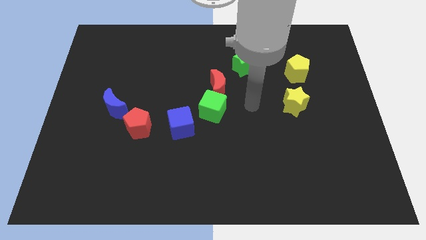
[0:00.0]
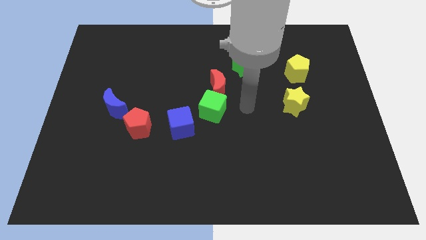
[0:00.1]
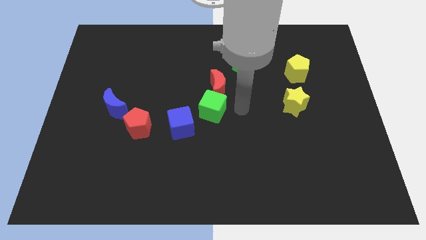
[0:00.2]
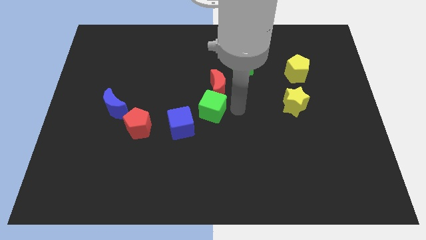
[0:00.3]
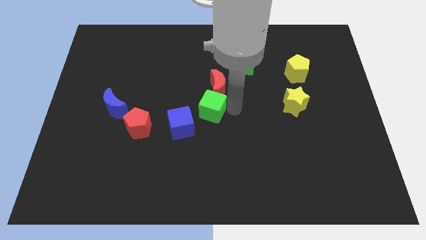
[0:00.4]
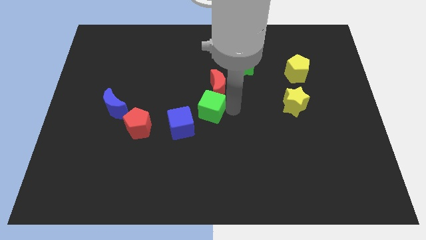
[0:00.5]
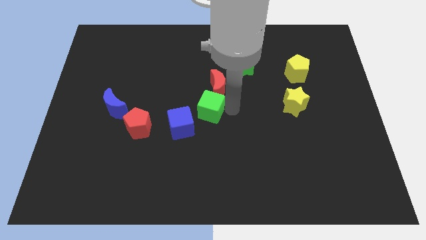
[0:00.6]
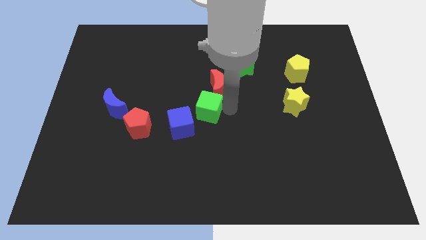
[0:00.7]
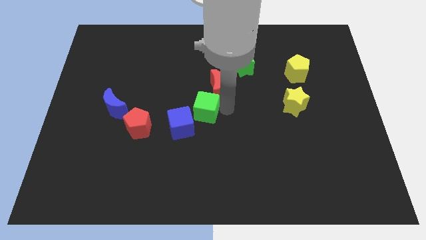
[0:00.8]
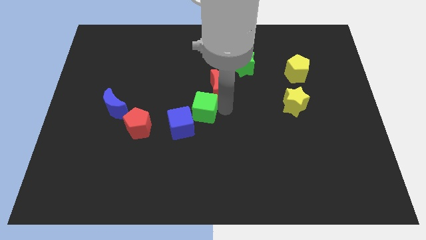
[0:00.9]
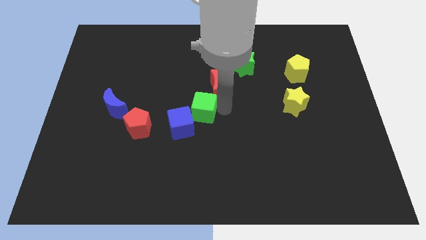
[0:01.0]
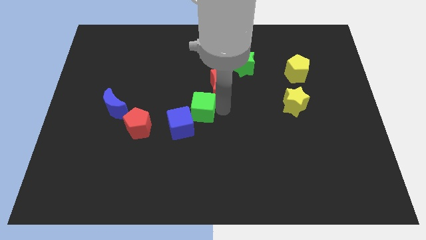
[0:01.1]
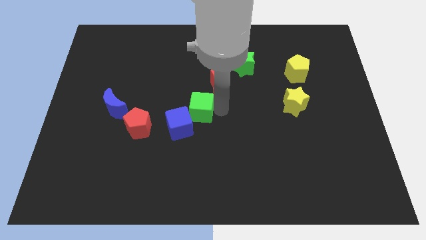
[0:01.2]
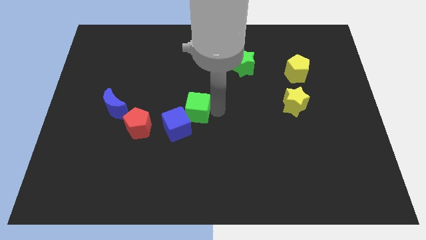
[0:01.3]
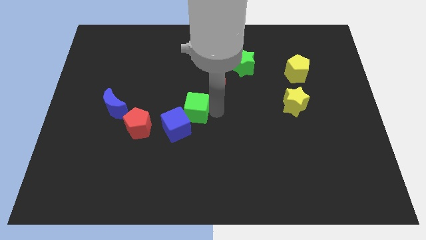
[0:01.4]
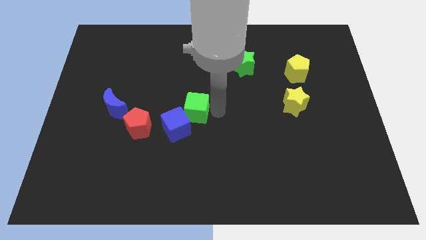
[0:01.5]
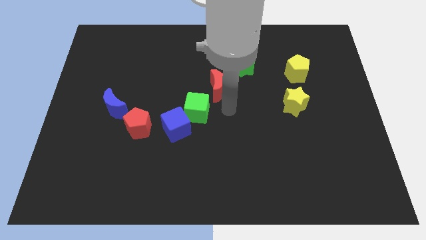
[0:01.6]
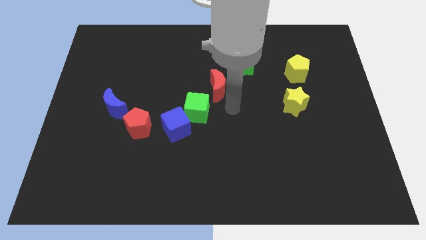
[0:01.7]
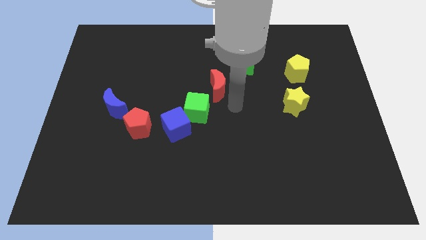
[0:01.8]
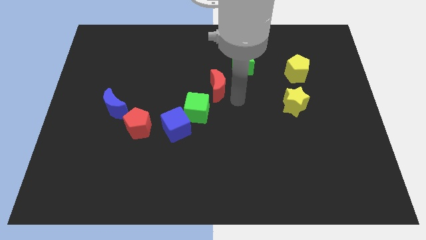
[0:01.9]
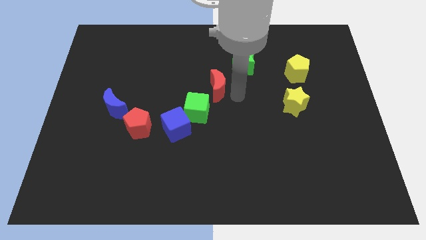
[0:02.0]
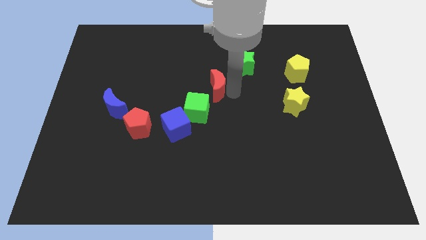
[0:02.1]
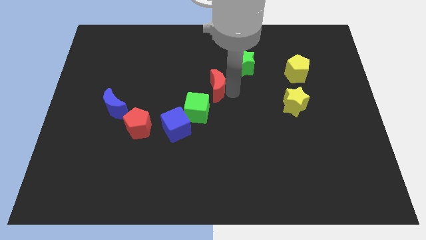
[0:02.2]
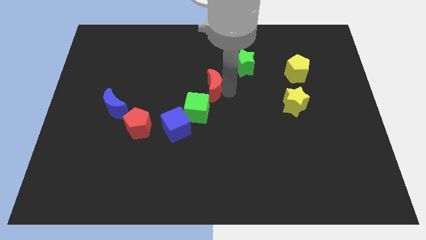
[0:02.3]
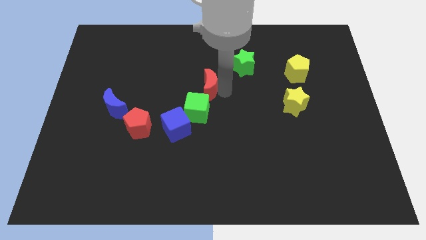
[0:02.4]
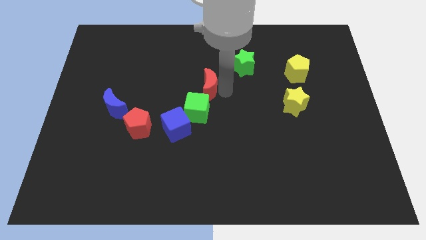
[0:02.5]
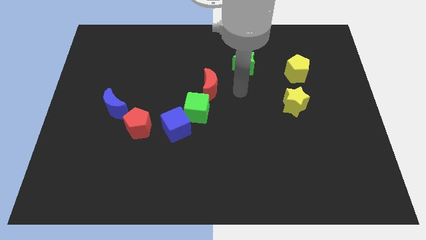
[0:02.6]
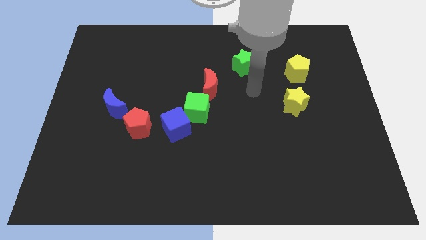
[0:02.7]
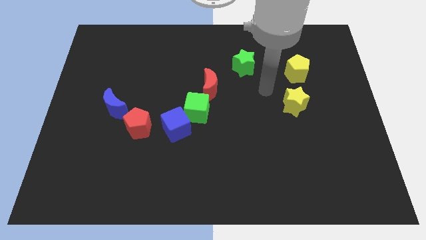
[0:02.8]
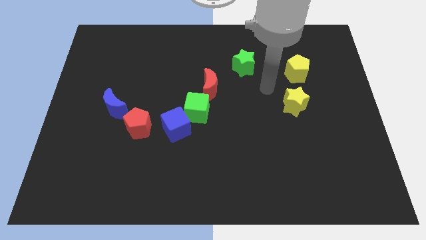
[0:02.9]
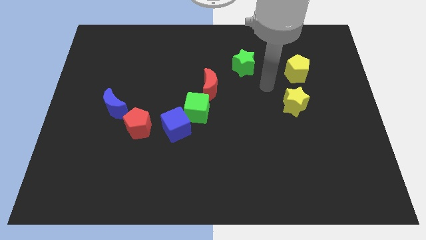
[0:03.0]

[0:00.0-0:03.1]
place the red moon above the green cube

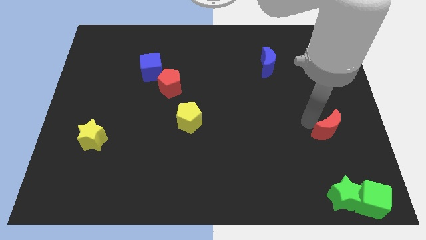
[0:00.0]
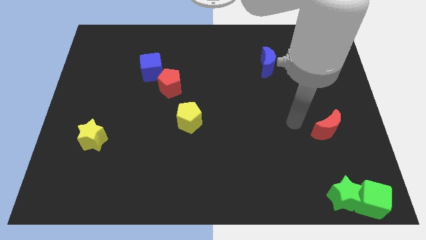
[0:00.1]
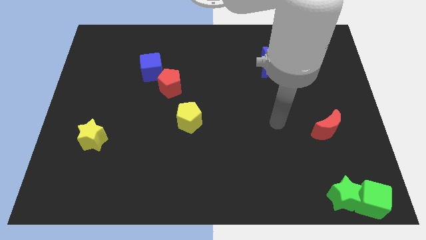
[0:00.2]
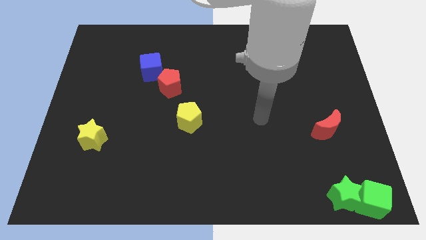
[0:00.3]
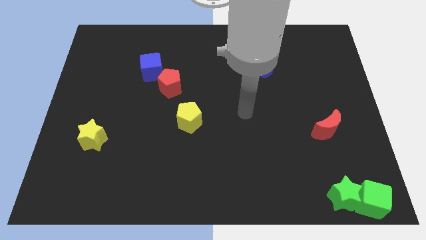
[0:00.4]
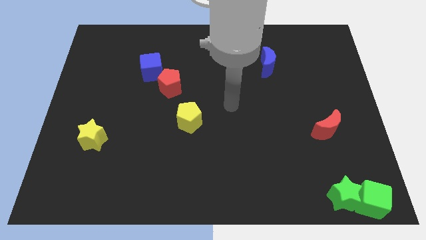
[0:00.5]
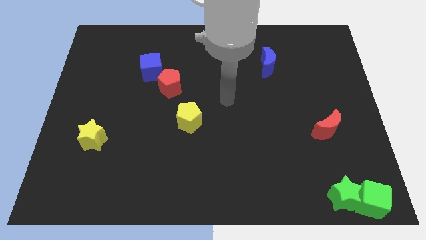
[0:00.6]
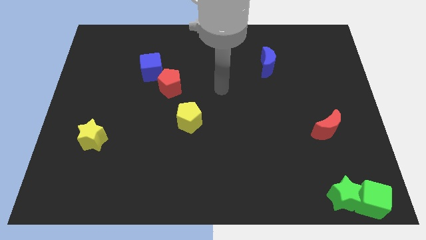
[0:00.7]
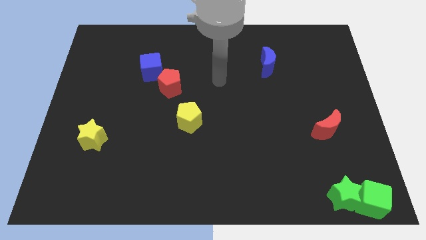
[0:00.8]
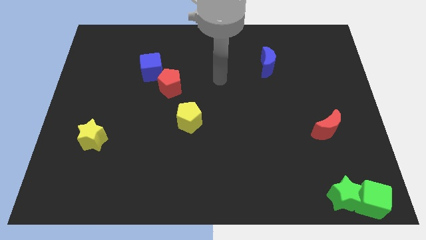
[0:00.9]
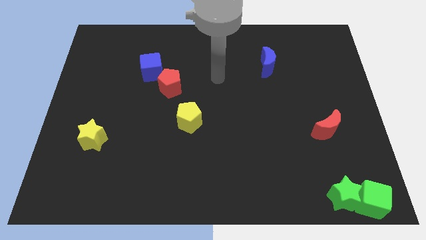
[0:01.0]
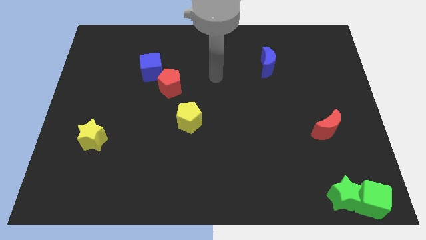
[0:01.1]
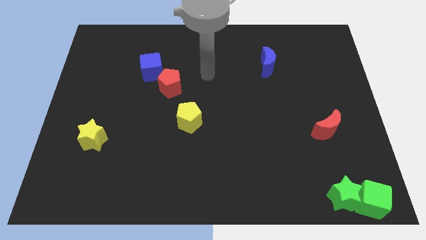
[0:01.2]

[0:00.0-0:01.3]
move your arm away from red moon

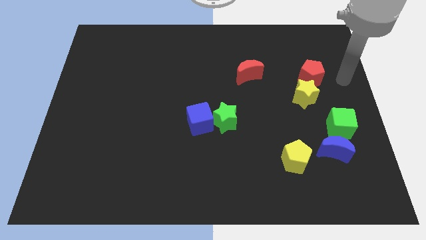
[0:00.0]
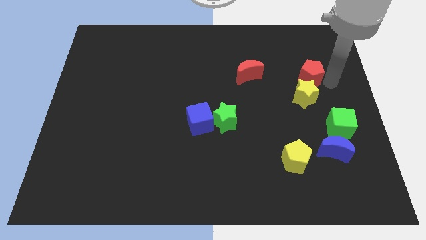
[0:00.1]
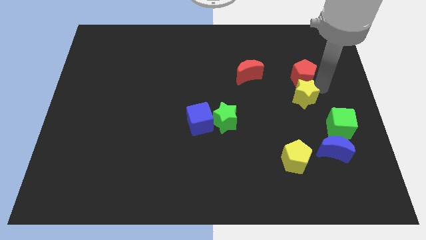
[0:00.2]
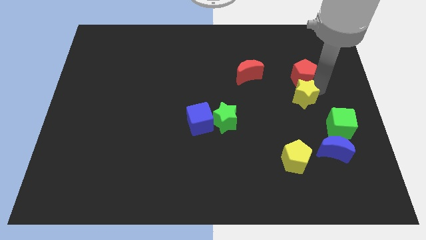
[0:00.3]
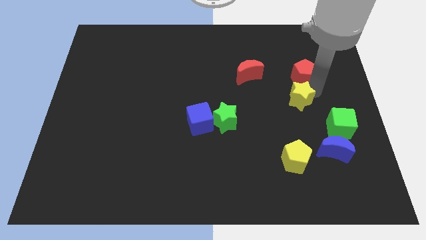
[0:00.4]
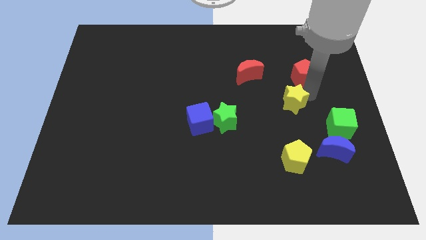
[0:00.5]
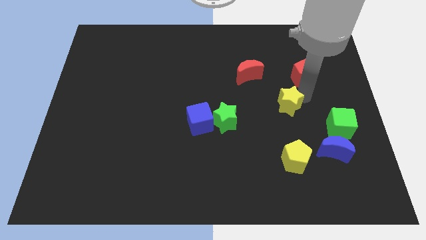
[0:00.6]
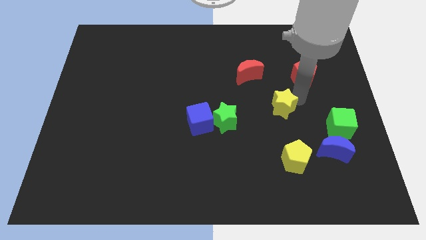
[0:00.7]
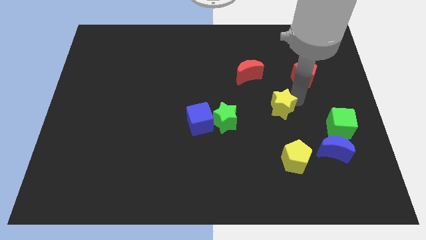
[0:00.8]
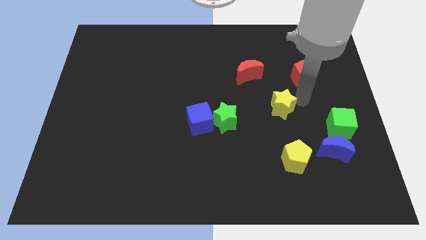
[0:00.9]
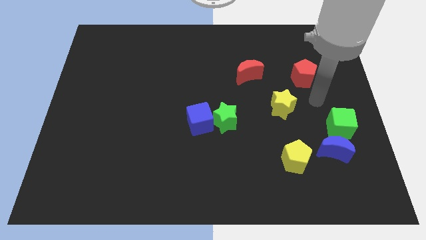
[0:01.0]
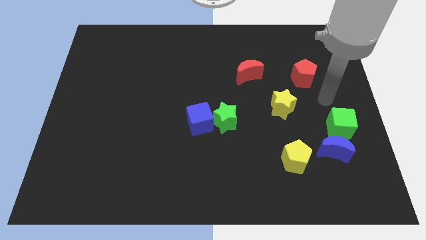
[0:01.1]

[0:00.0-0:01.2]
slightly push the yellow star diagonally to the bottom left to the red pentagon

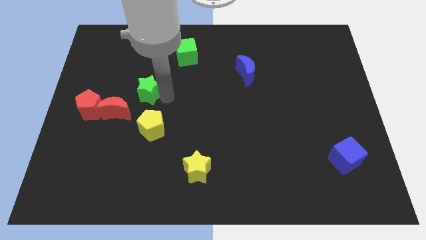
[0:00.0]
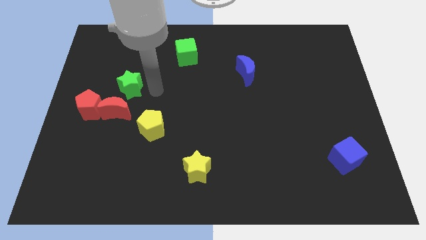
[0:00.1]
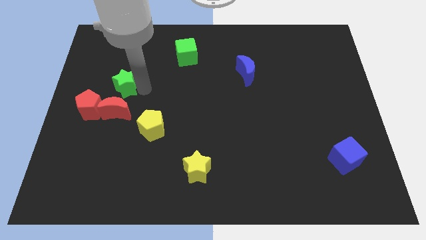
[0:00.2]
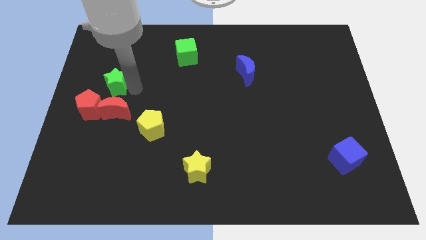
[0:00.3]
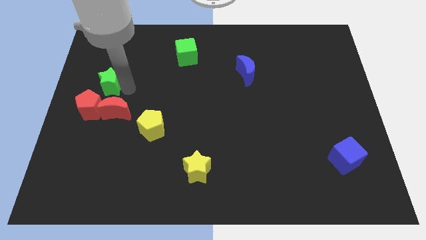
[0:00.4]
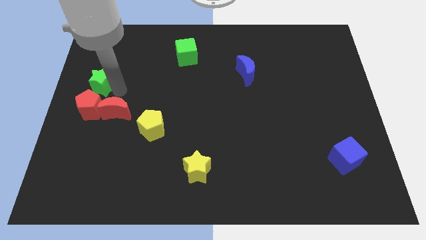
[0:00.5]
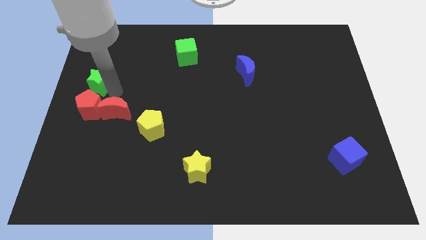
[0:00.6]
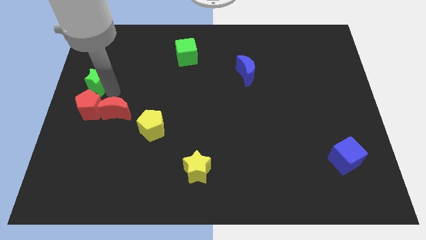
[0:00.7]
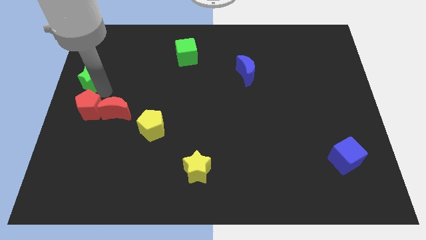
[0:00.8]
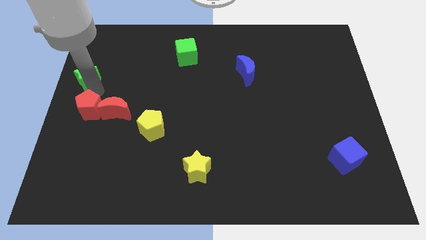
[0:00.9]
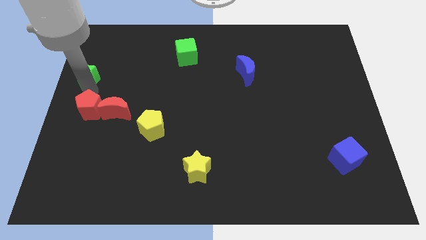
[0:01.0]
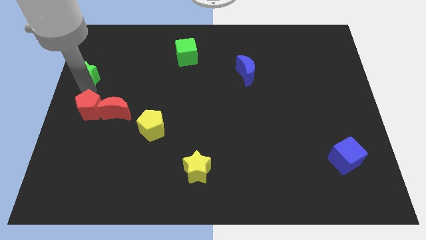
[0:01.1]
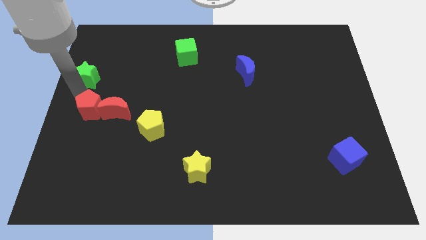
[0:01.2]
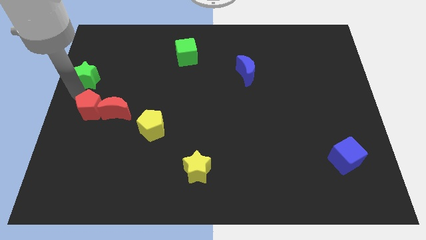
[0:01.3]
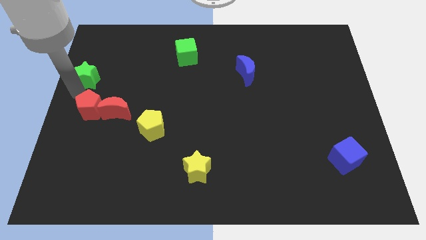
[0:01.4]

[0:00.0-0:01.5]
push the green star towards top left of the board

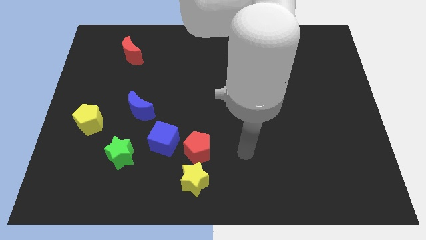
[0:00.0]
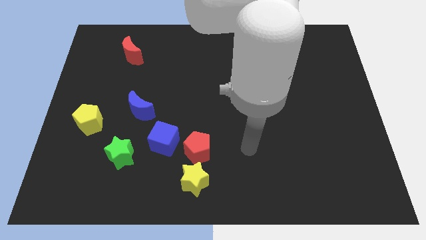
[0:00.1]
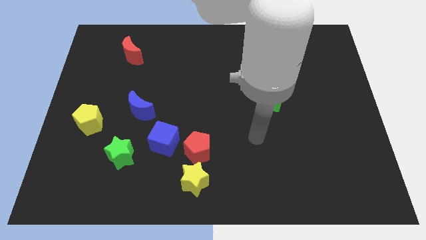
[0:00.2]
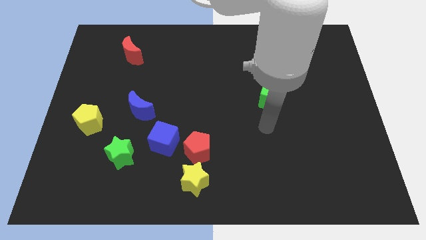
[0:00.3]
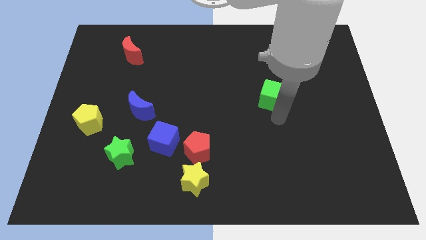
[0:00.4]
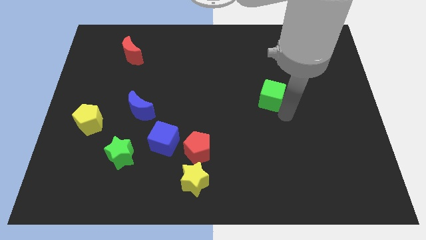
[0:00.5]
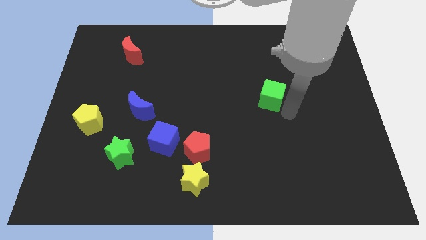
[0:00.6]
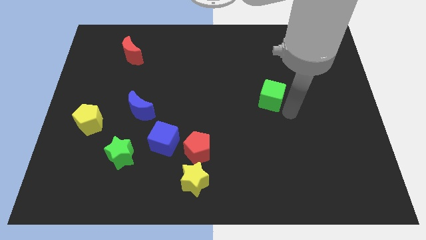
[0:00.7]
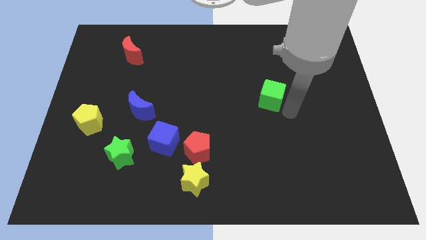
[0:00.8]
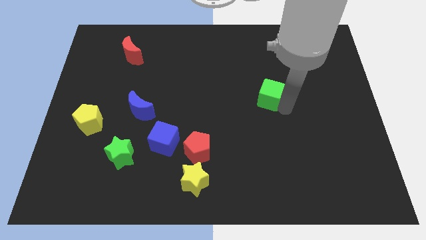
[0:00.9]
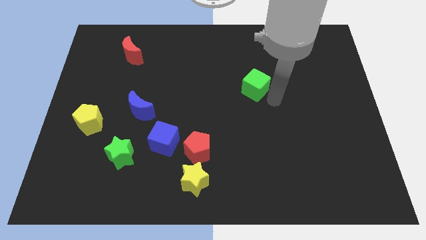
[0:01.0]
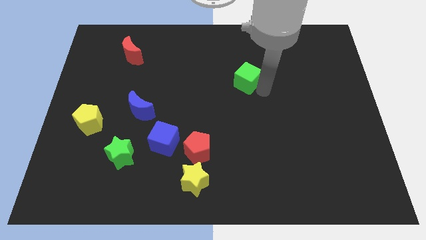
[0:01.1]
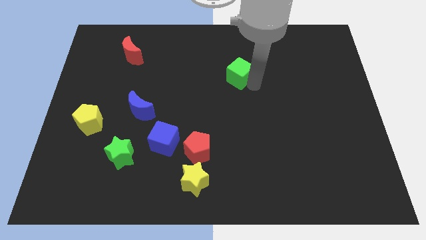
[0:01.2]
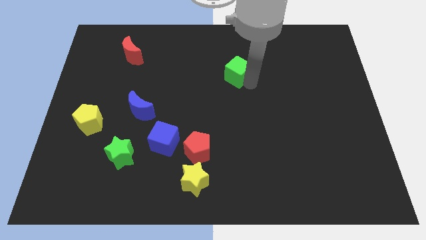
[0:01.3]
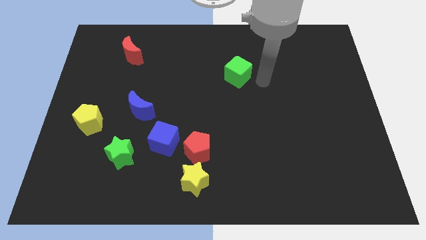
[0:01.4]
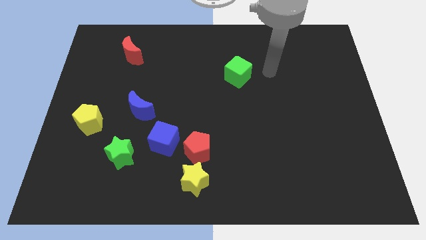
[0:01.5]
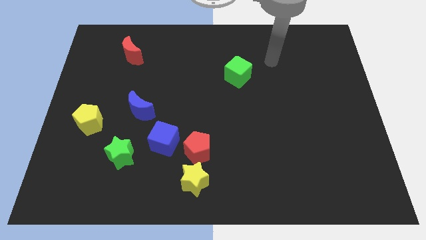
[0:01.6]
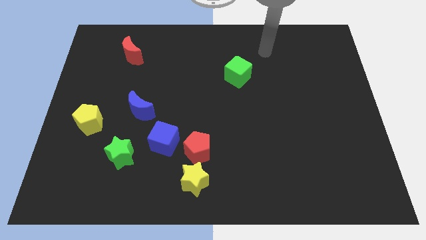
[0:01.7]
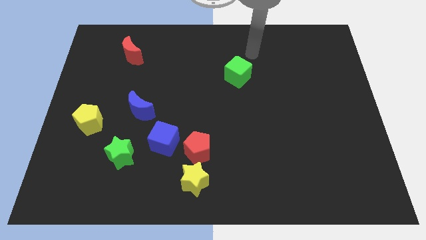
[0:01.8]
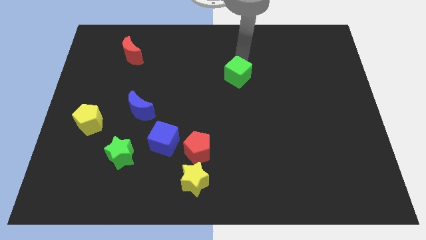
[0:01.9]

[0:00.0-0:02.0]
move the green cube towards the center top of the board

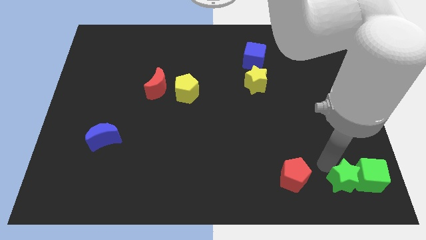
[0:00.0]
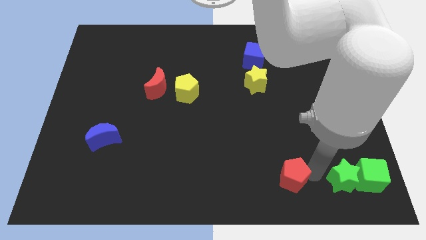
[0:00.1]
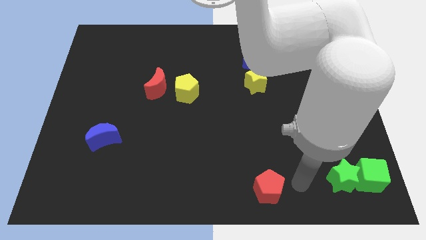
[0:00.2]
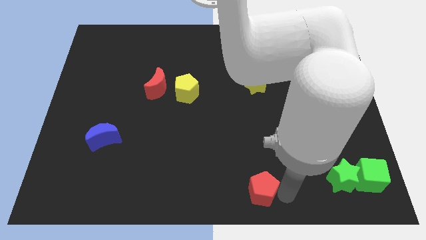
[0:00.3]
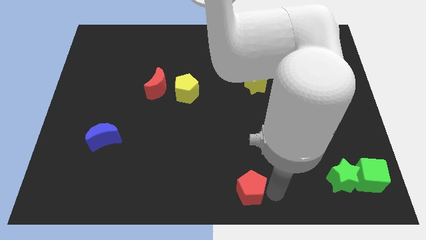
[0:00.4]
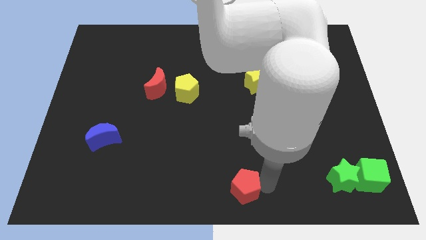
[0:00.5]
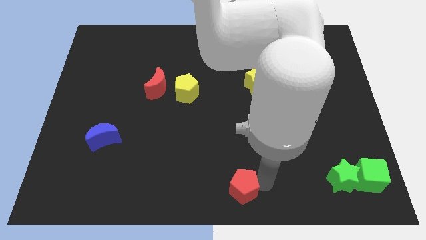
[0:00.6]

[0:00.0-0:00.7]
move red pentagon to the left
